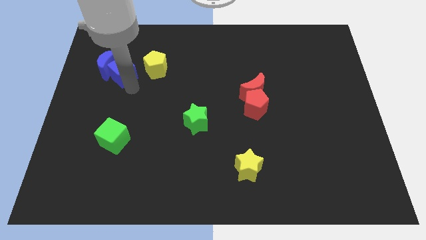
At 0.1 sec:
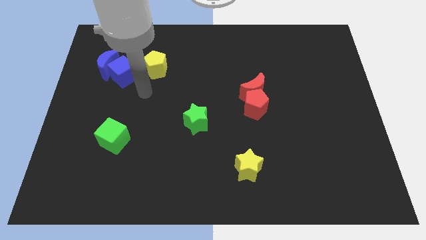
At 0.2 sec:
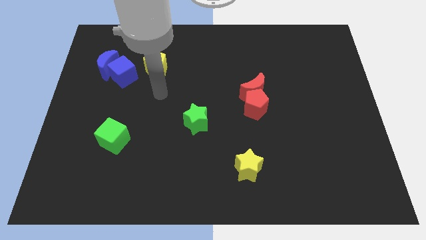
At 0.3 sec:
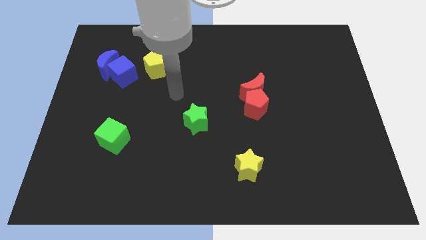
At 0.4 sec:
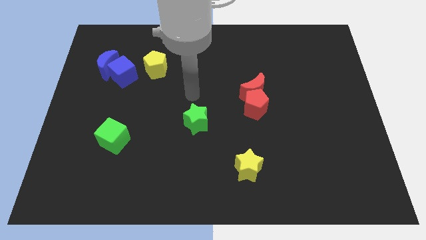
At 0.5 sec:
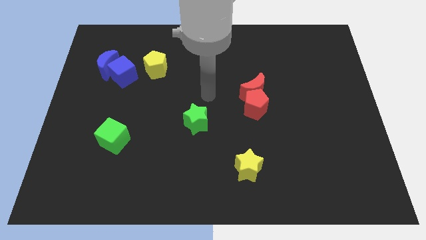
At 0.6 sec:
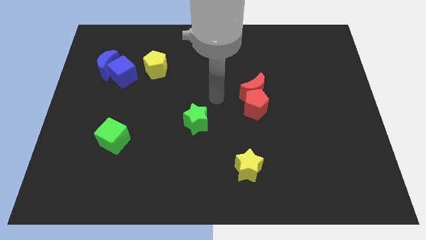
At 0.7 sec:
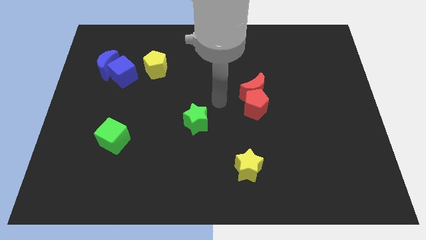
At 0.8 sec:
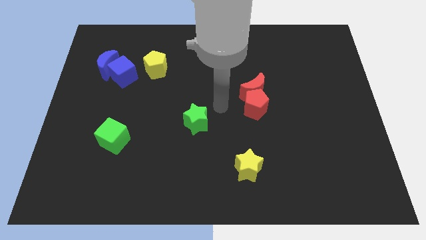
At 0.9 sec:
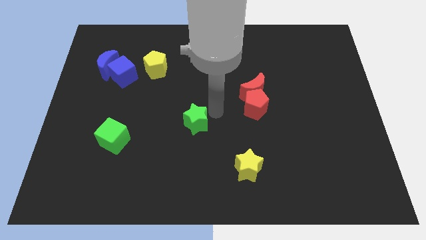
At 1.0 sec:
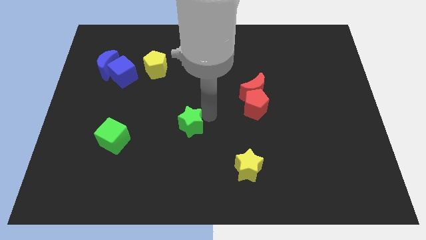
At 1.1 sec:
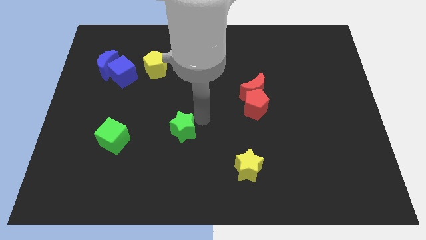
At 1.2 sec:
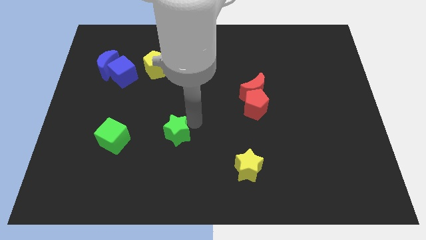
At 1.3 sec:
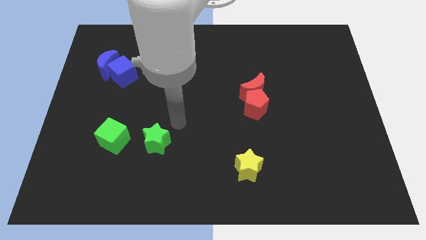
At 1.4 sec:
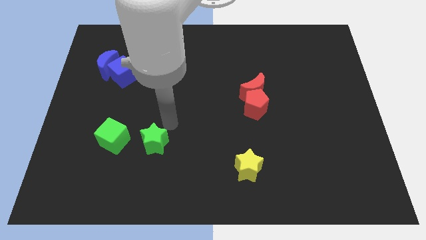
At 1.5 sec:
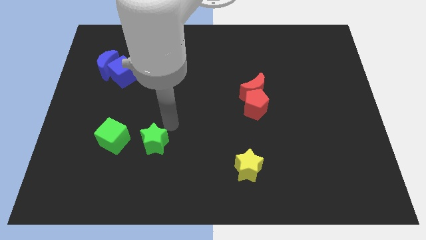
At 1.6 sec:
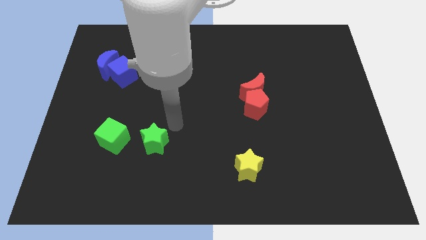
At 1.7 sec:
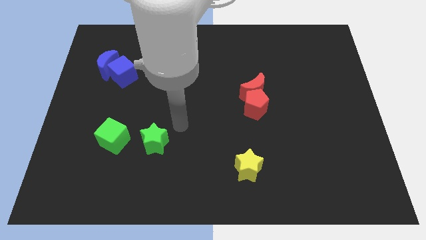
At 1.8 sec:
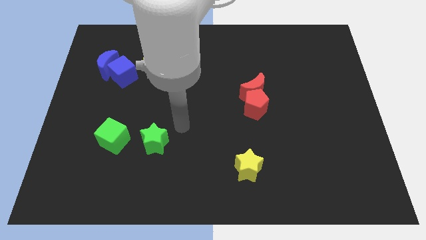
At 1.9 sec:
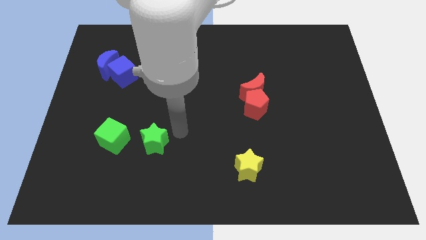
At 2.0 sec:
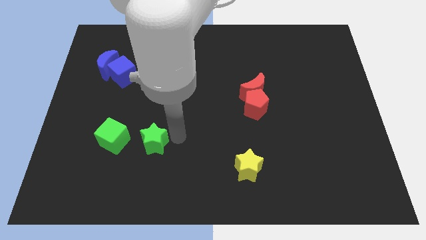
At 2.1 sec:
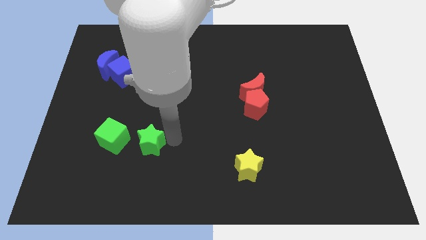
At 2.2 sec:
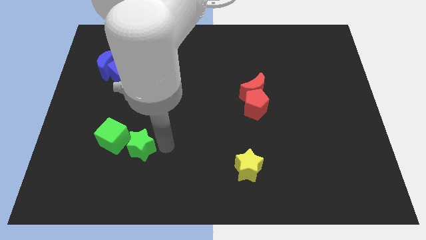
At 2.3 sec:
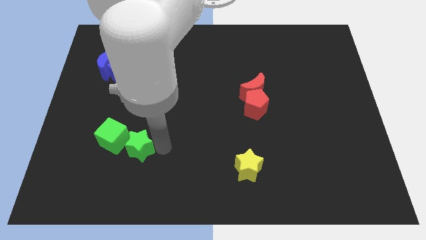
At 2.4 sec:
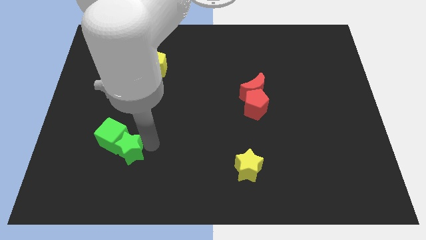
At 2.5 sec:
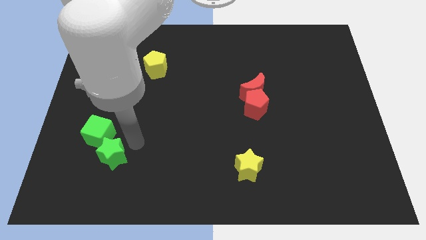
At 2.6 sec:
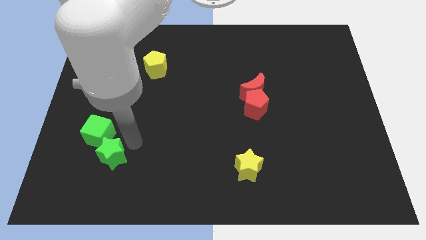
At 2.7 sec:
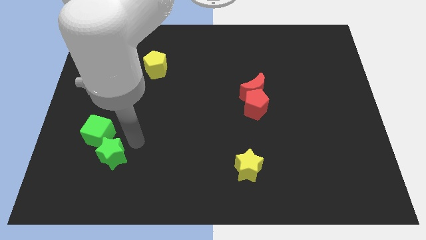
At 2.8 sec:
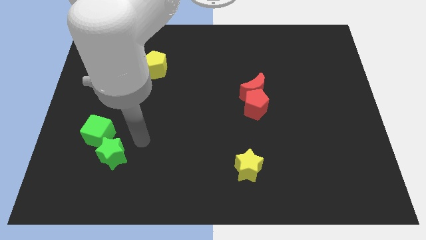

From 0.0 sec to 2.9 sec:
push the green star to the bottom right to the green cube

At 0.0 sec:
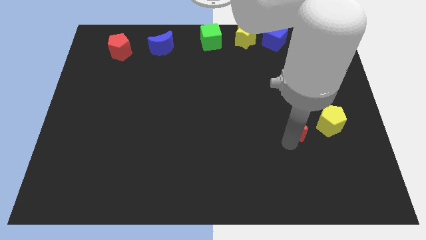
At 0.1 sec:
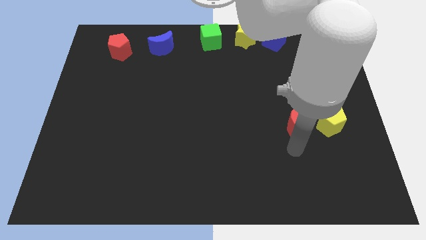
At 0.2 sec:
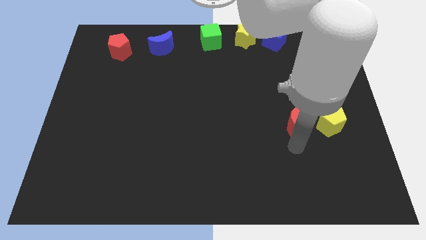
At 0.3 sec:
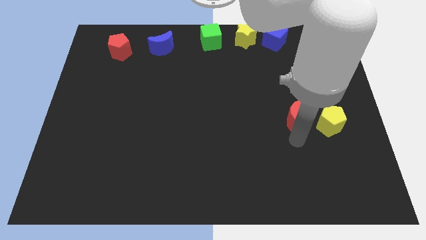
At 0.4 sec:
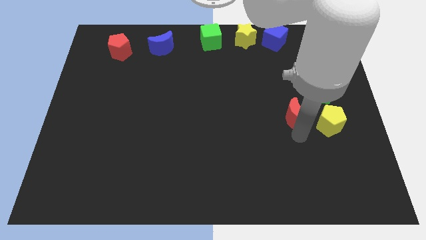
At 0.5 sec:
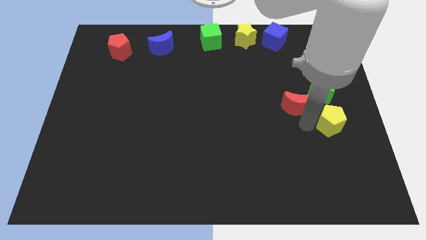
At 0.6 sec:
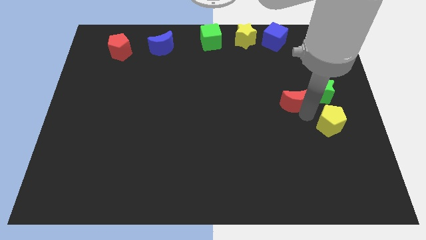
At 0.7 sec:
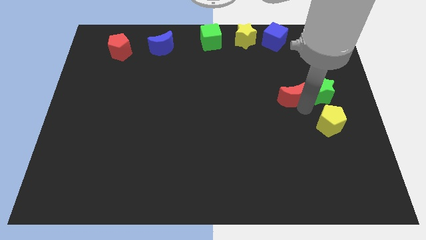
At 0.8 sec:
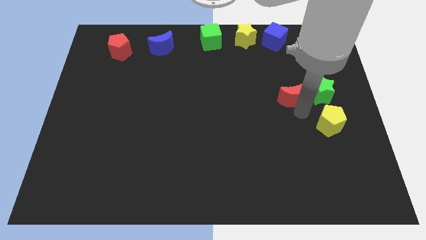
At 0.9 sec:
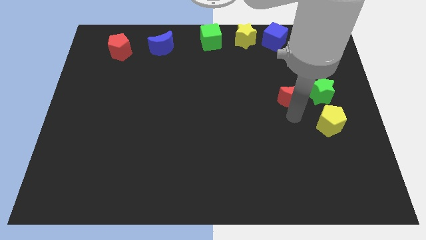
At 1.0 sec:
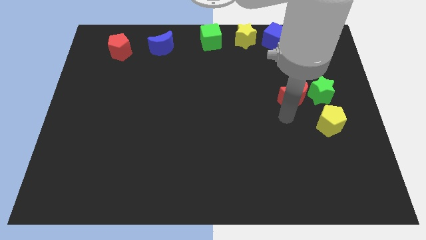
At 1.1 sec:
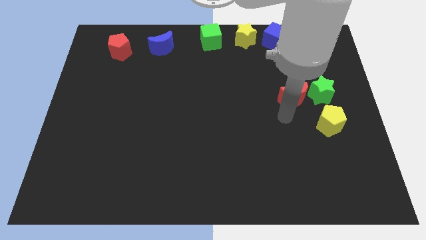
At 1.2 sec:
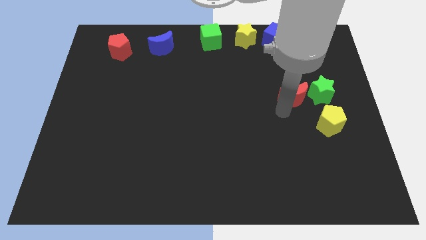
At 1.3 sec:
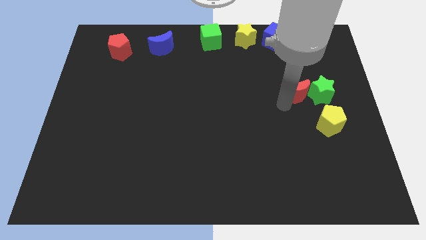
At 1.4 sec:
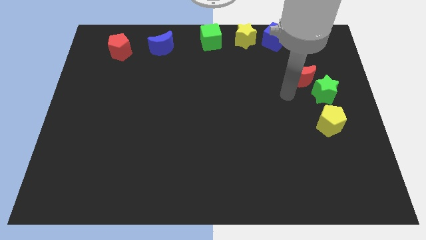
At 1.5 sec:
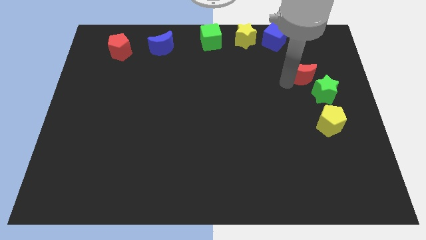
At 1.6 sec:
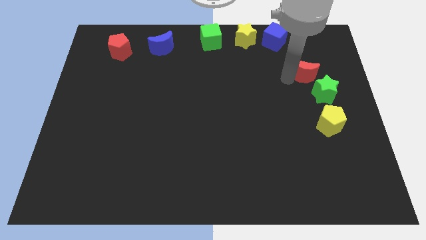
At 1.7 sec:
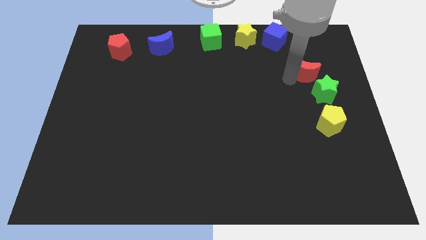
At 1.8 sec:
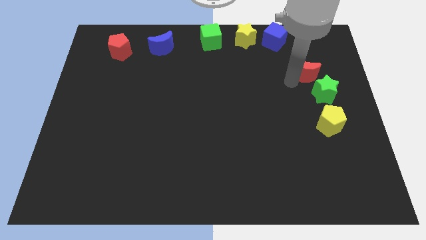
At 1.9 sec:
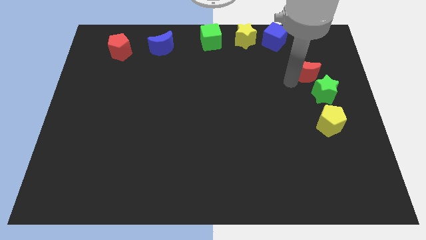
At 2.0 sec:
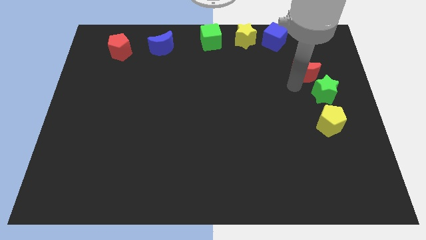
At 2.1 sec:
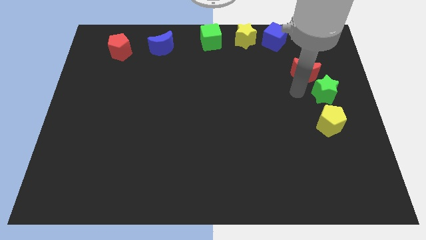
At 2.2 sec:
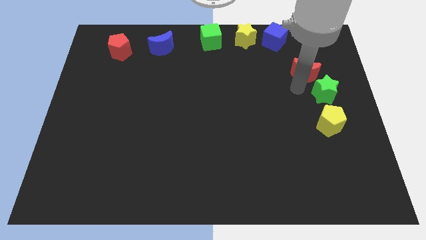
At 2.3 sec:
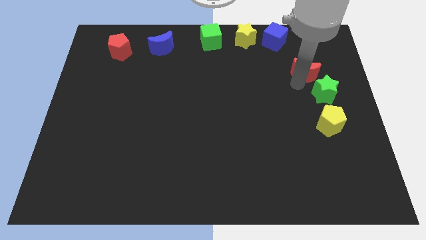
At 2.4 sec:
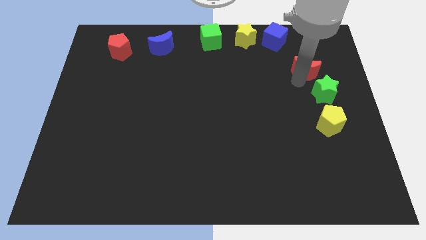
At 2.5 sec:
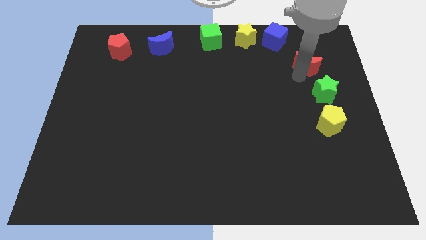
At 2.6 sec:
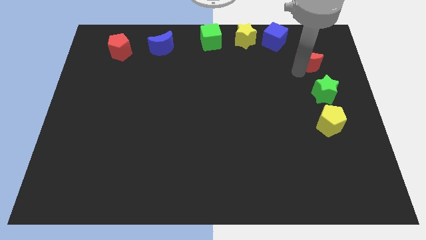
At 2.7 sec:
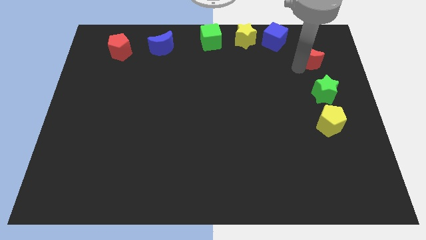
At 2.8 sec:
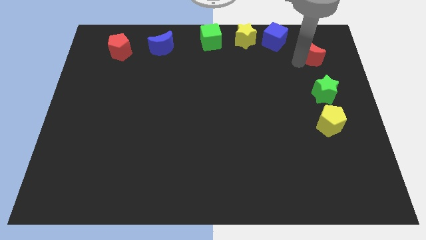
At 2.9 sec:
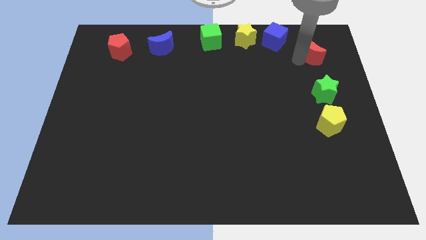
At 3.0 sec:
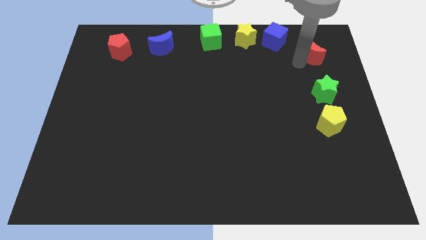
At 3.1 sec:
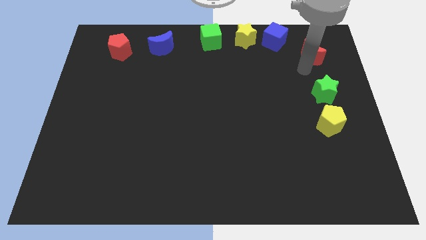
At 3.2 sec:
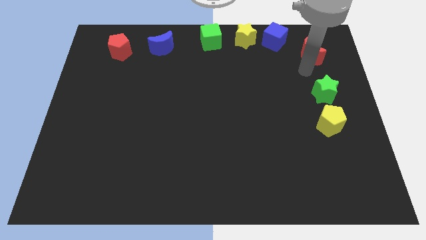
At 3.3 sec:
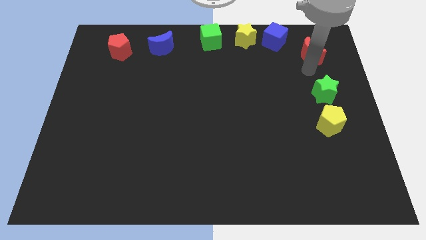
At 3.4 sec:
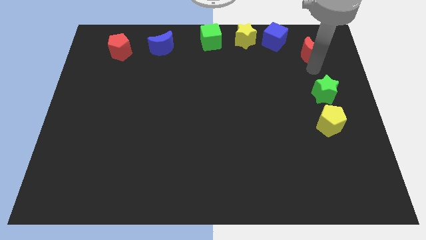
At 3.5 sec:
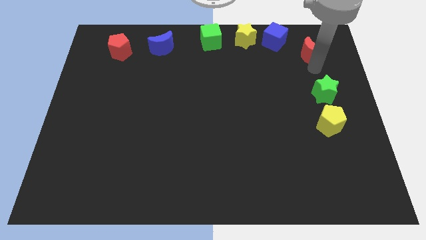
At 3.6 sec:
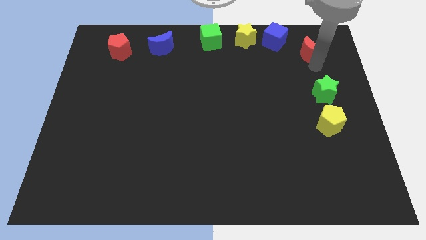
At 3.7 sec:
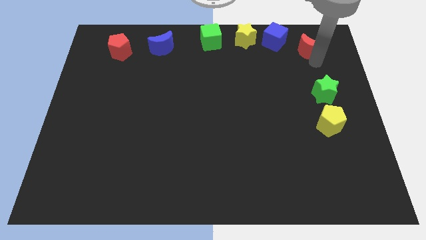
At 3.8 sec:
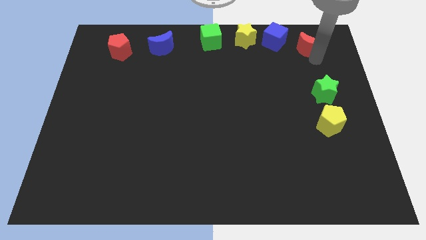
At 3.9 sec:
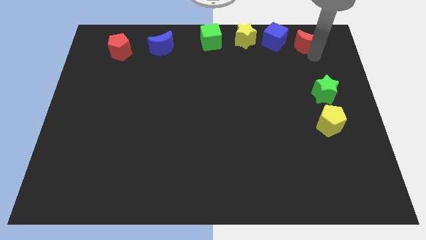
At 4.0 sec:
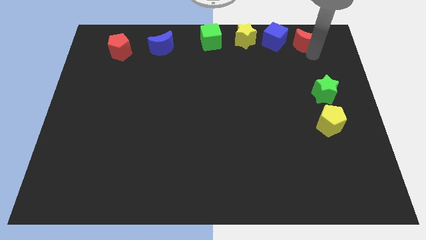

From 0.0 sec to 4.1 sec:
put the red crescent to the right of the blue cube

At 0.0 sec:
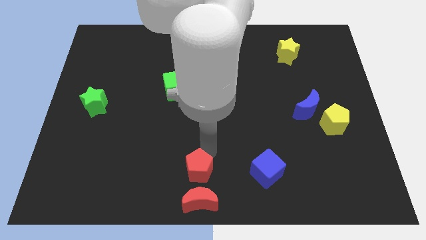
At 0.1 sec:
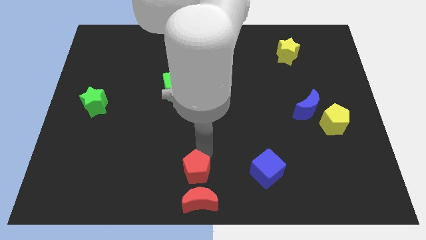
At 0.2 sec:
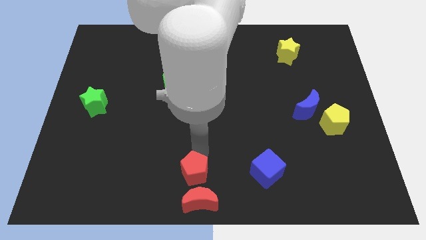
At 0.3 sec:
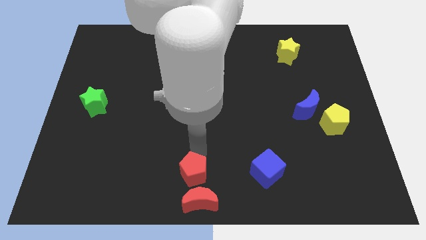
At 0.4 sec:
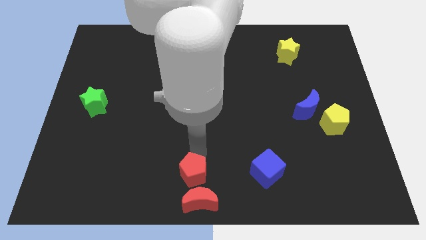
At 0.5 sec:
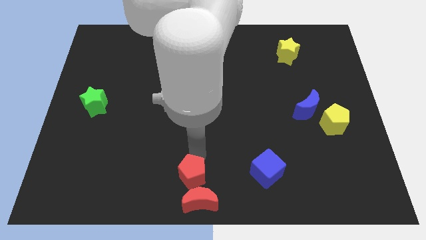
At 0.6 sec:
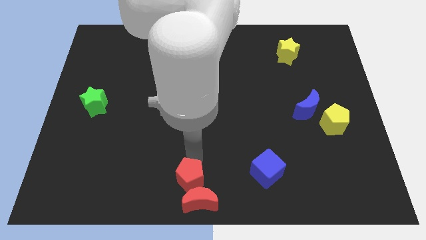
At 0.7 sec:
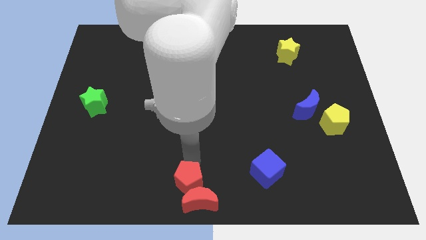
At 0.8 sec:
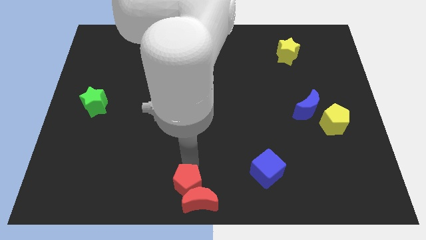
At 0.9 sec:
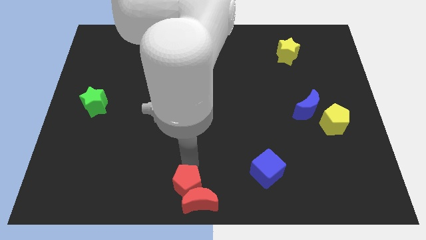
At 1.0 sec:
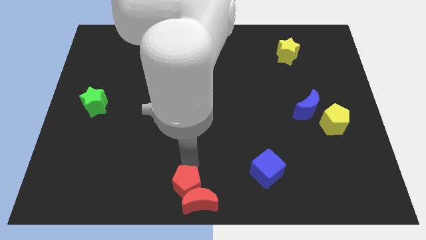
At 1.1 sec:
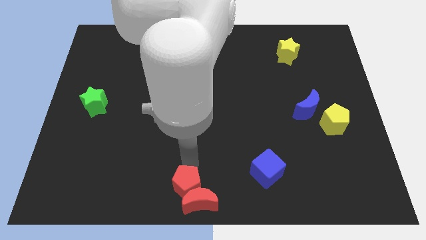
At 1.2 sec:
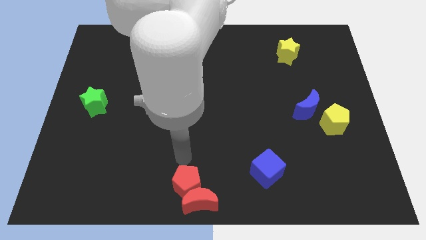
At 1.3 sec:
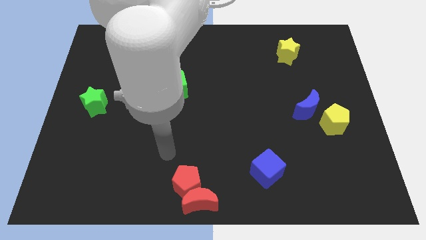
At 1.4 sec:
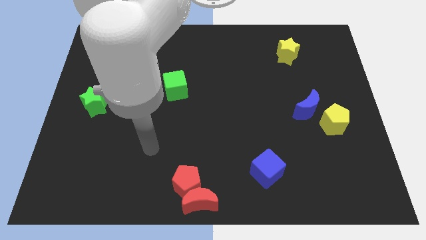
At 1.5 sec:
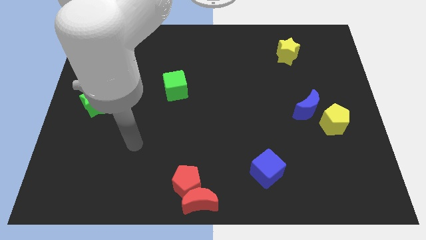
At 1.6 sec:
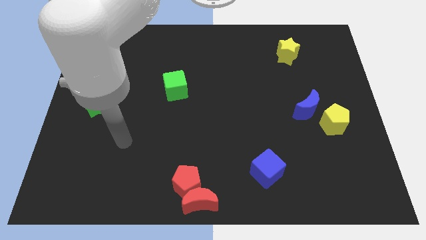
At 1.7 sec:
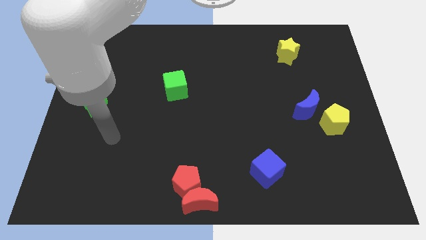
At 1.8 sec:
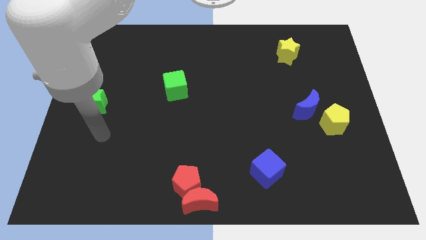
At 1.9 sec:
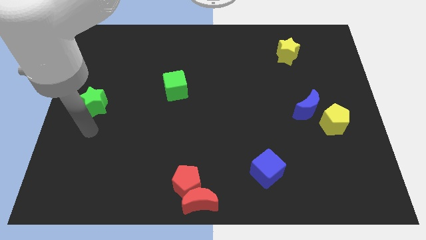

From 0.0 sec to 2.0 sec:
push the red pentagon into red crescent
